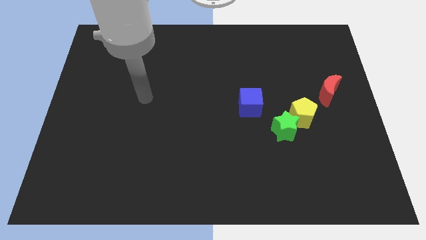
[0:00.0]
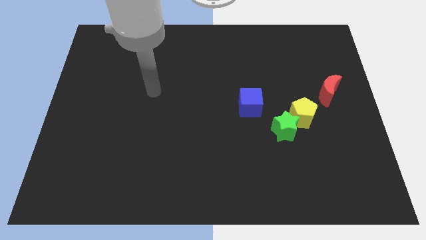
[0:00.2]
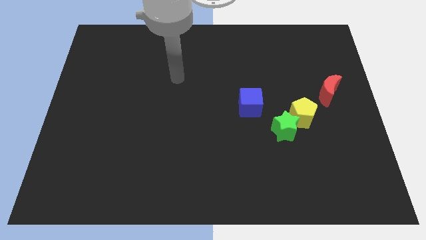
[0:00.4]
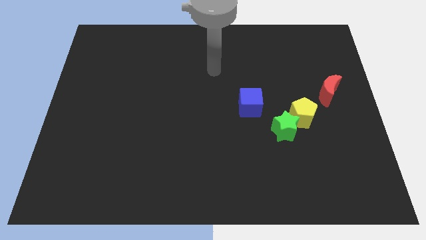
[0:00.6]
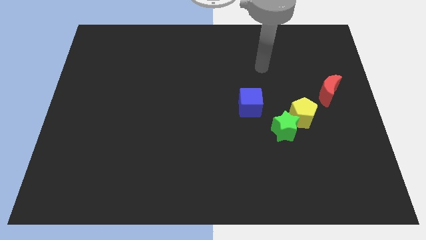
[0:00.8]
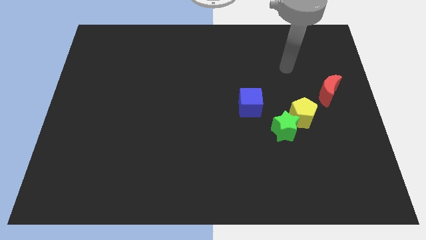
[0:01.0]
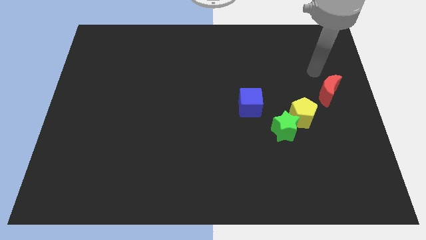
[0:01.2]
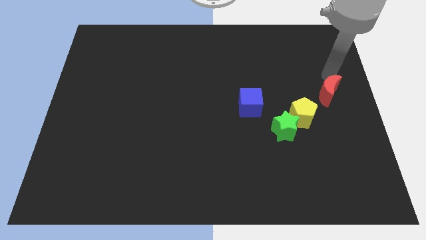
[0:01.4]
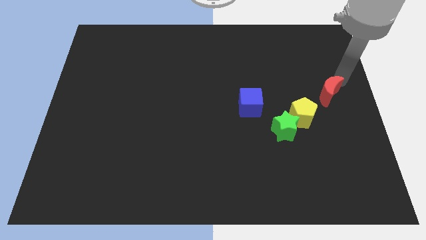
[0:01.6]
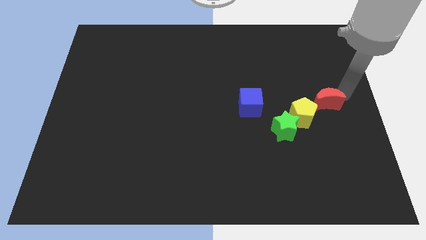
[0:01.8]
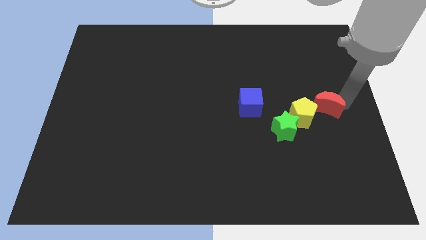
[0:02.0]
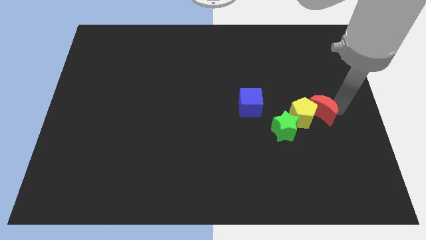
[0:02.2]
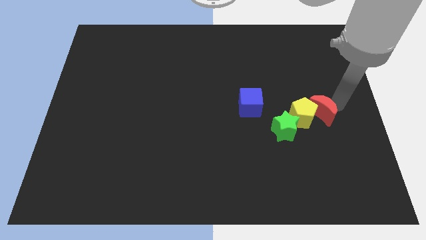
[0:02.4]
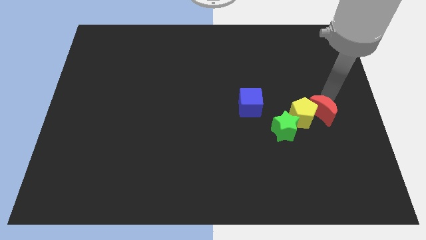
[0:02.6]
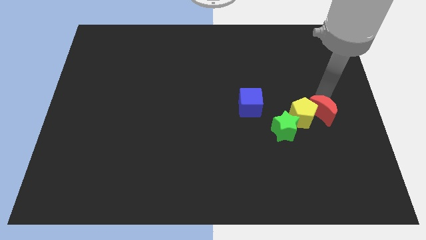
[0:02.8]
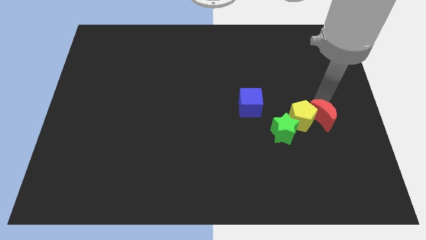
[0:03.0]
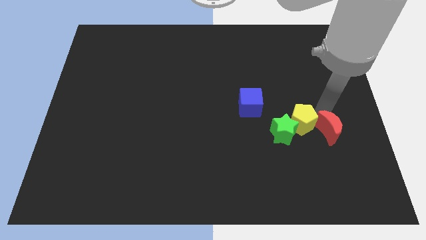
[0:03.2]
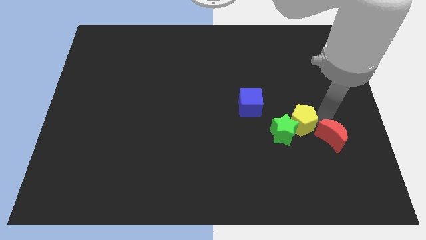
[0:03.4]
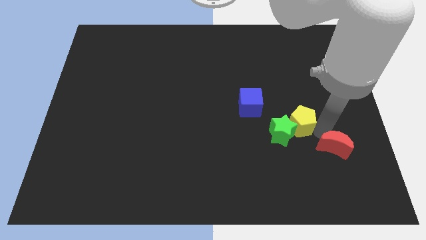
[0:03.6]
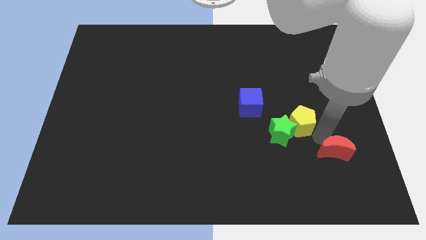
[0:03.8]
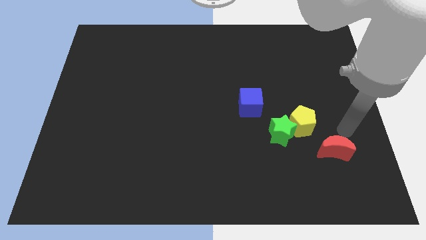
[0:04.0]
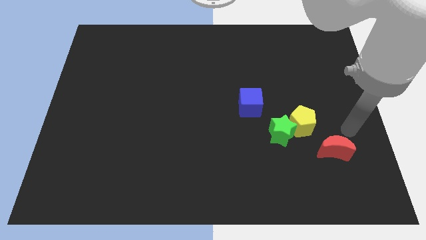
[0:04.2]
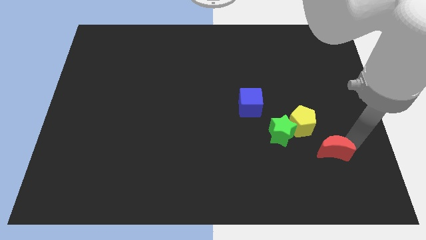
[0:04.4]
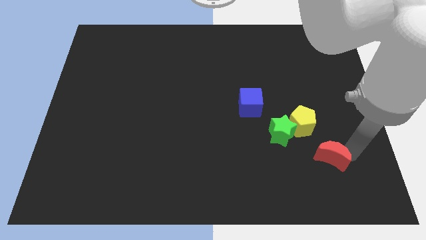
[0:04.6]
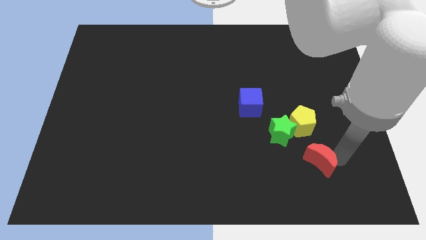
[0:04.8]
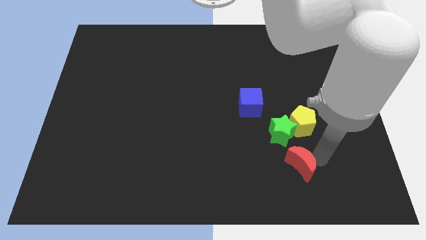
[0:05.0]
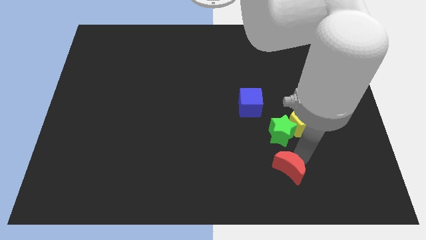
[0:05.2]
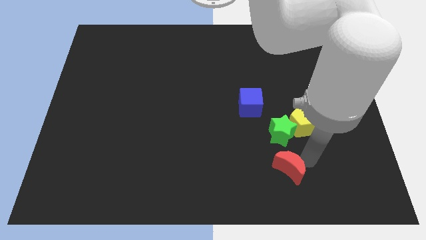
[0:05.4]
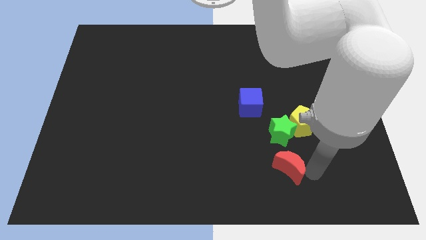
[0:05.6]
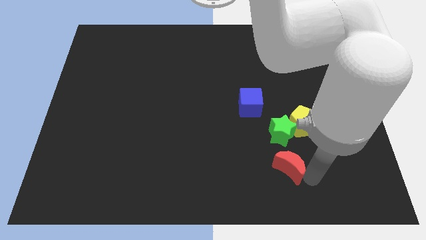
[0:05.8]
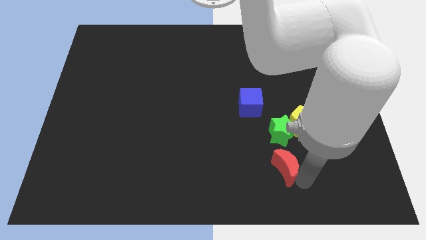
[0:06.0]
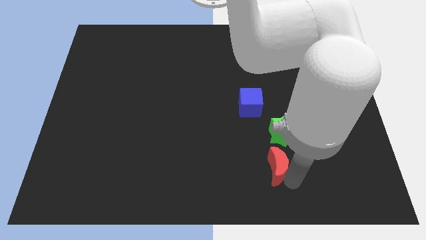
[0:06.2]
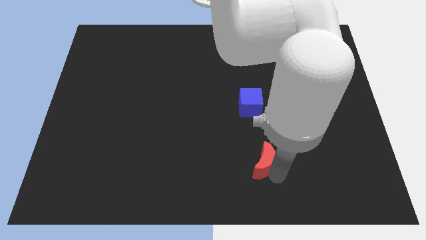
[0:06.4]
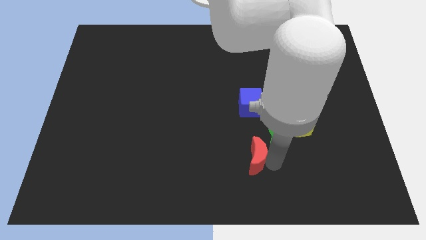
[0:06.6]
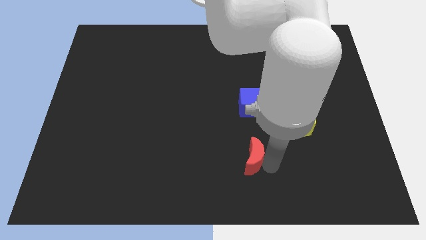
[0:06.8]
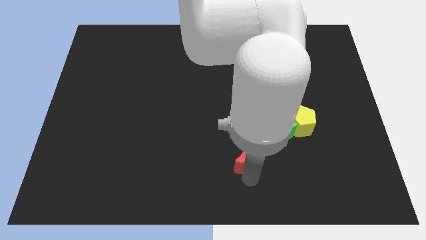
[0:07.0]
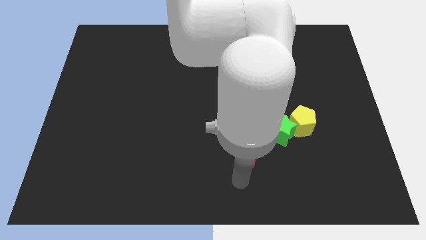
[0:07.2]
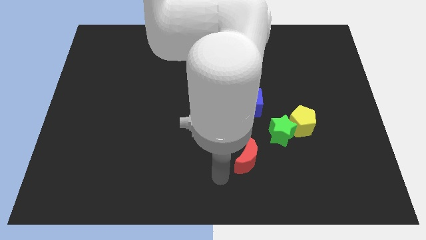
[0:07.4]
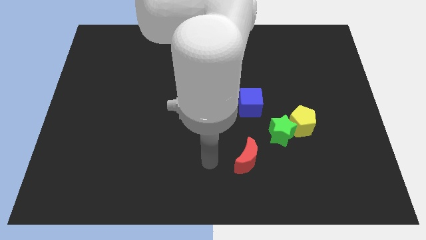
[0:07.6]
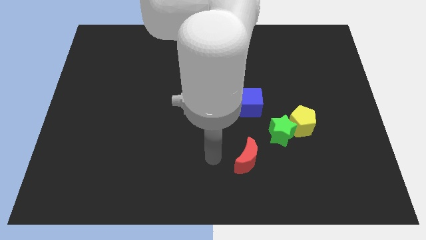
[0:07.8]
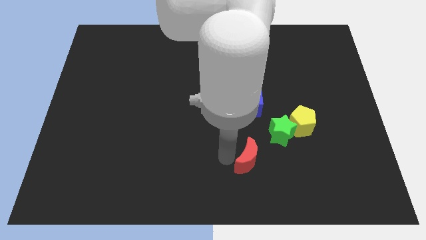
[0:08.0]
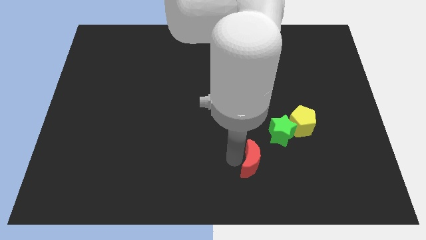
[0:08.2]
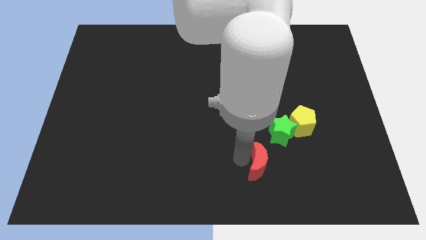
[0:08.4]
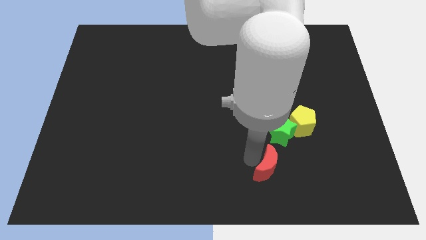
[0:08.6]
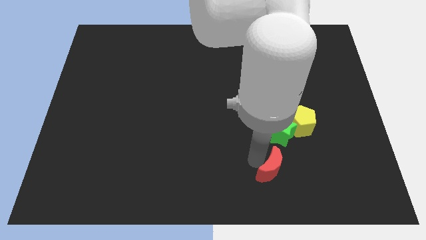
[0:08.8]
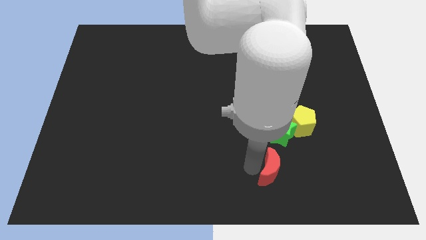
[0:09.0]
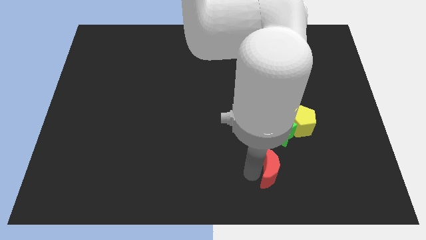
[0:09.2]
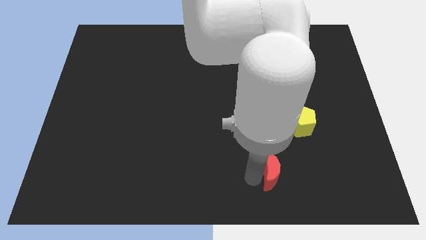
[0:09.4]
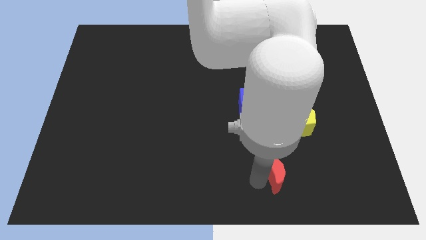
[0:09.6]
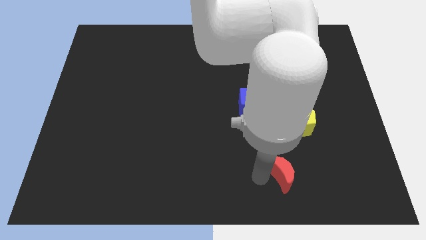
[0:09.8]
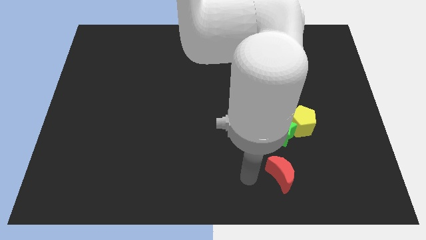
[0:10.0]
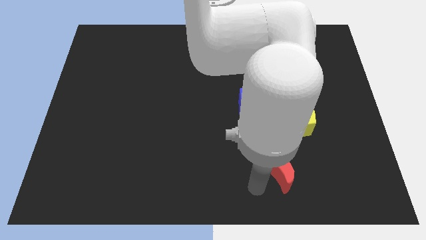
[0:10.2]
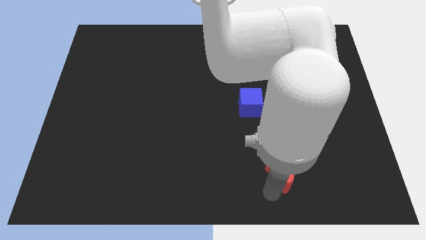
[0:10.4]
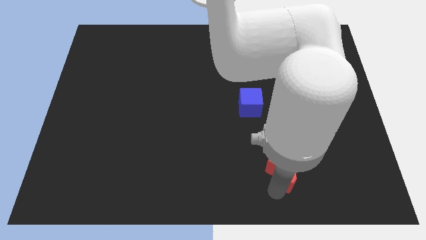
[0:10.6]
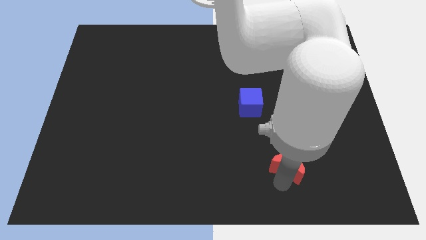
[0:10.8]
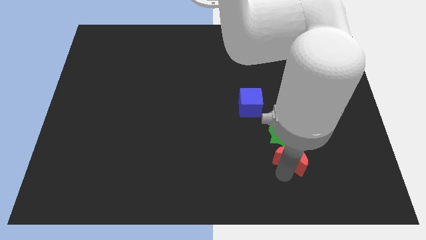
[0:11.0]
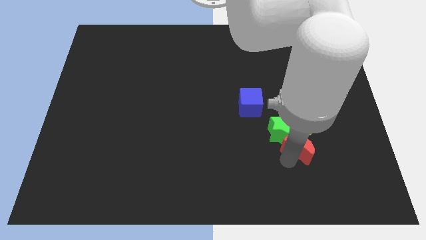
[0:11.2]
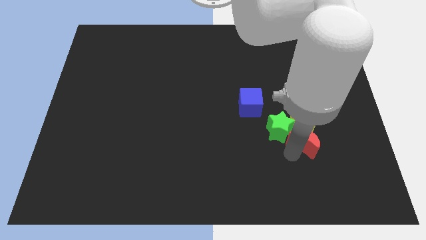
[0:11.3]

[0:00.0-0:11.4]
slide the red block close to the star

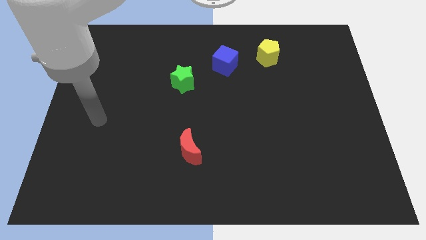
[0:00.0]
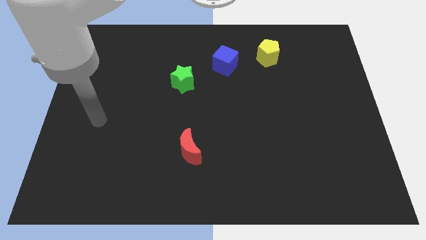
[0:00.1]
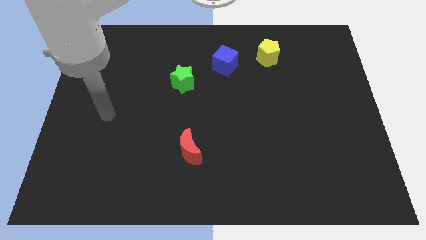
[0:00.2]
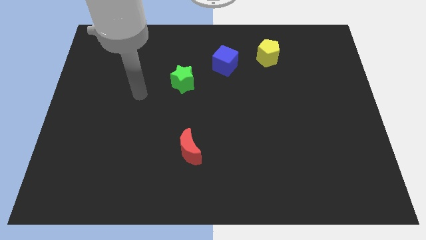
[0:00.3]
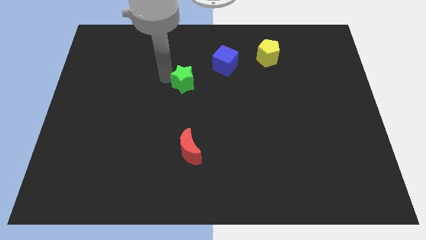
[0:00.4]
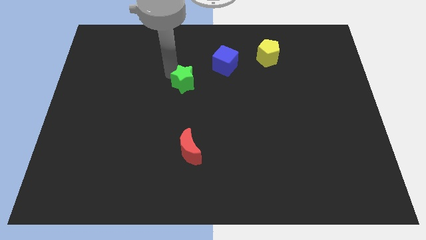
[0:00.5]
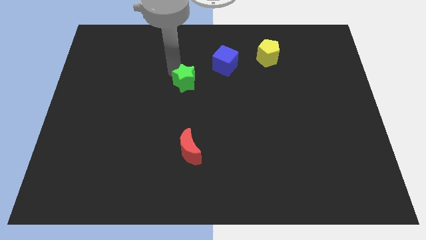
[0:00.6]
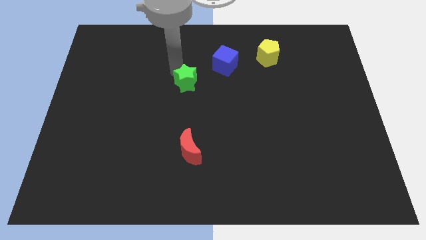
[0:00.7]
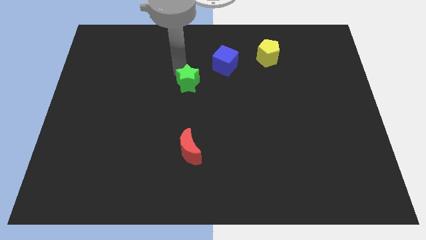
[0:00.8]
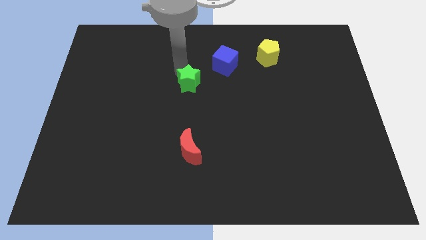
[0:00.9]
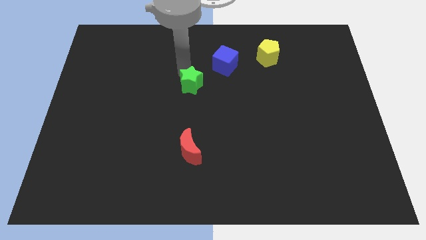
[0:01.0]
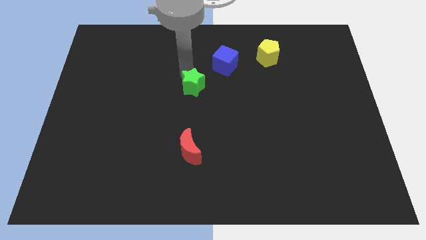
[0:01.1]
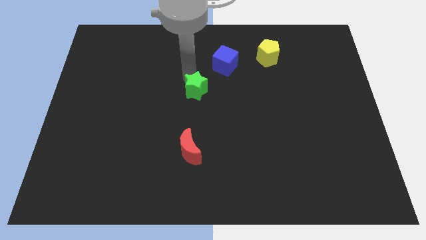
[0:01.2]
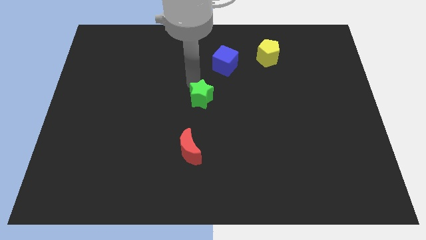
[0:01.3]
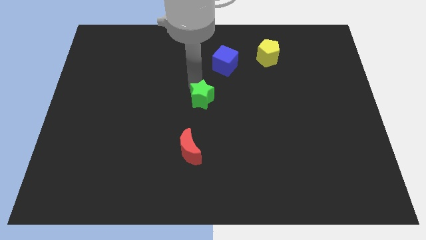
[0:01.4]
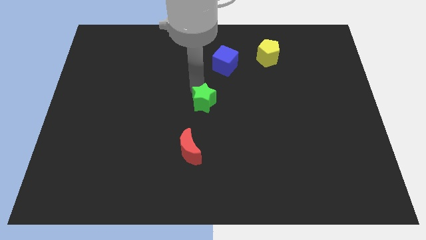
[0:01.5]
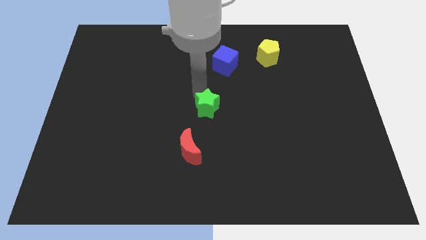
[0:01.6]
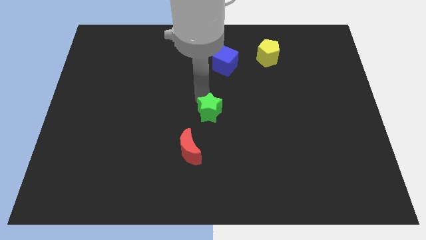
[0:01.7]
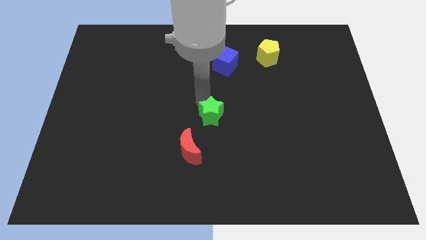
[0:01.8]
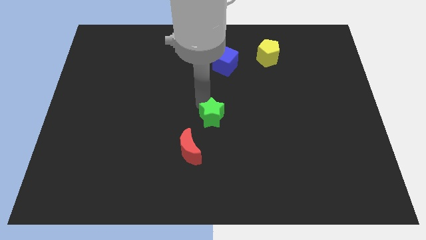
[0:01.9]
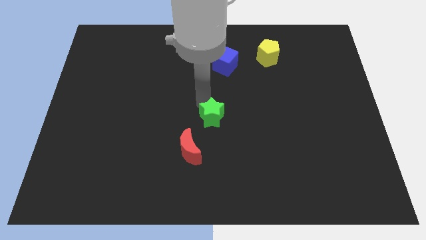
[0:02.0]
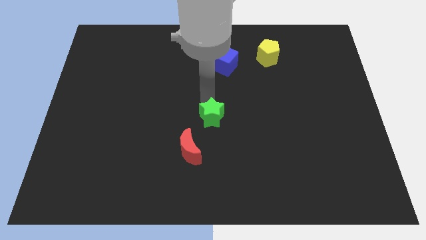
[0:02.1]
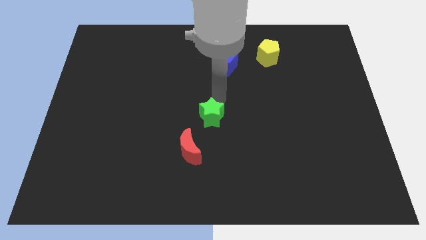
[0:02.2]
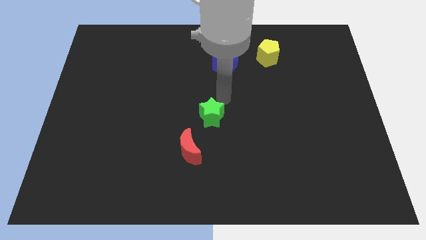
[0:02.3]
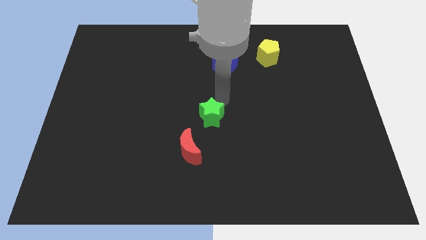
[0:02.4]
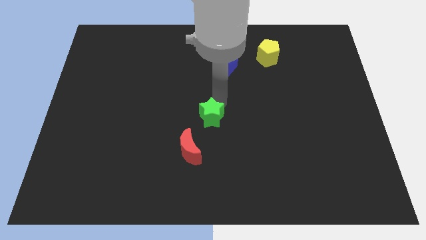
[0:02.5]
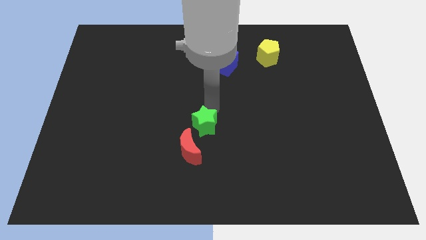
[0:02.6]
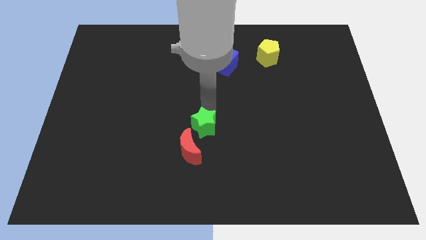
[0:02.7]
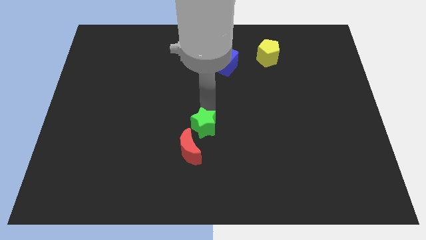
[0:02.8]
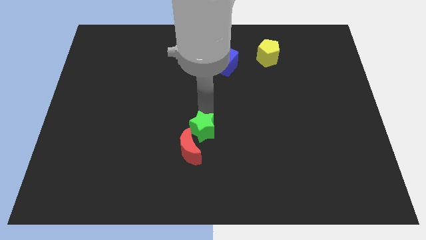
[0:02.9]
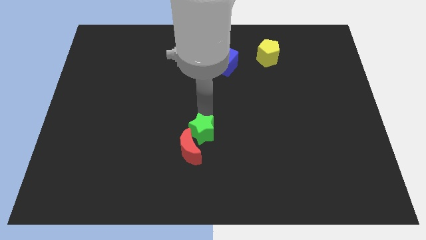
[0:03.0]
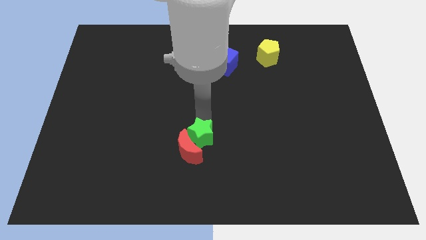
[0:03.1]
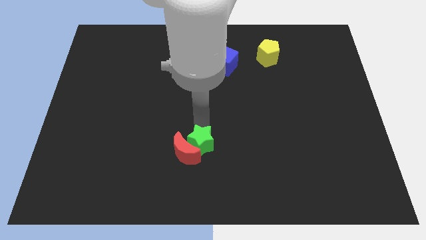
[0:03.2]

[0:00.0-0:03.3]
slide the green block to the red moon
